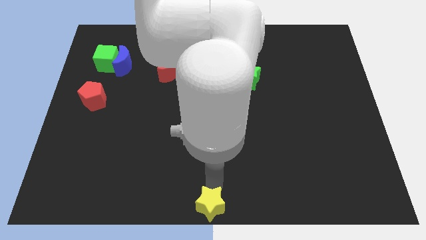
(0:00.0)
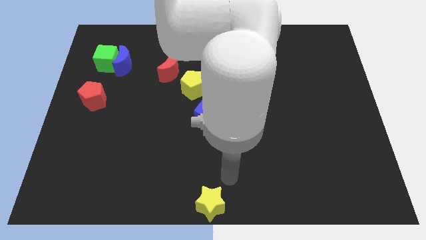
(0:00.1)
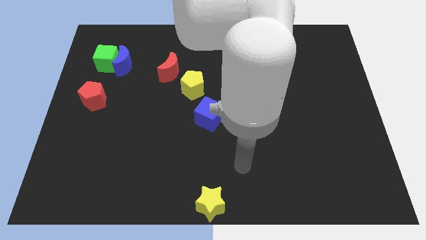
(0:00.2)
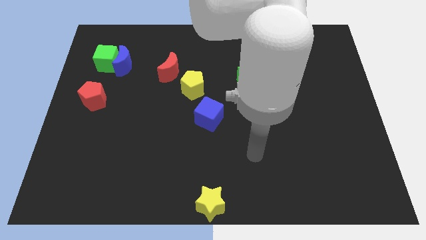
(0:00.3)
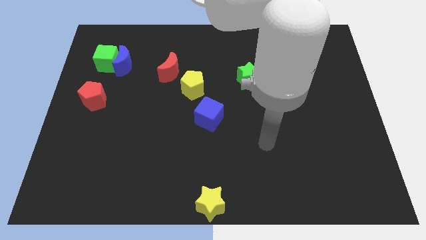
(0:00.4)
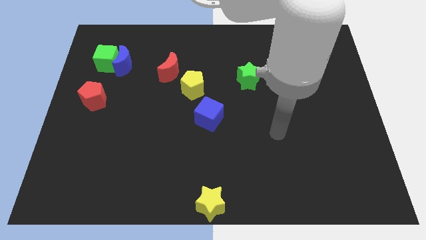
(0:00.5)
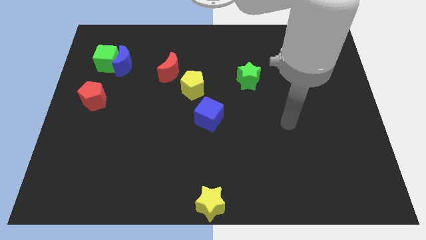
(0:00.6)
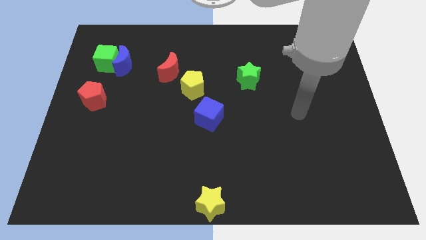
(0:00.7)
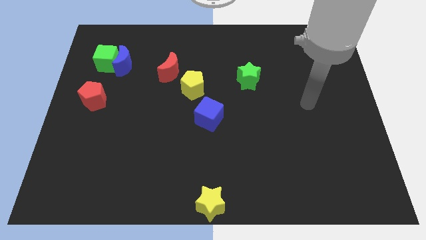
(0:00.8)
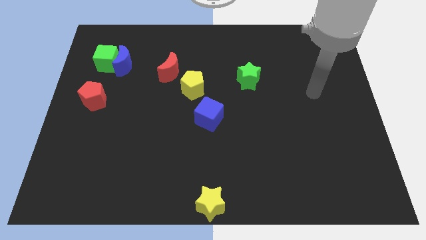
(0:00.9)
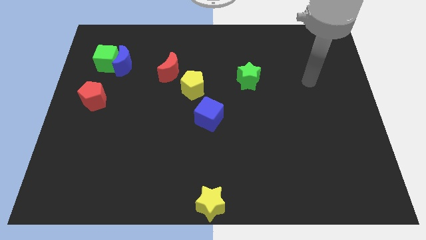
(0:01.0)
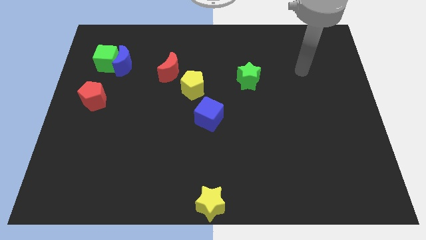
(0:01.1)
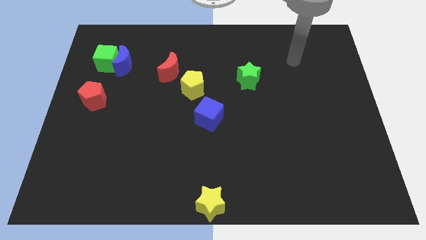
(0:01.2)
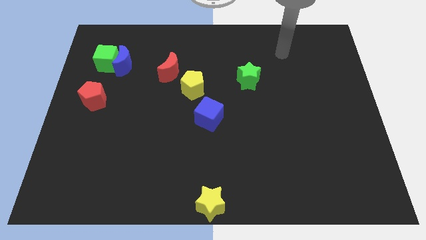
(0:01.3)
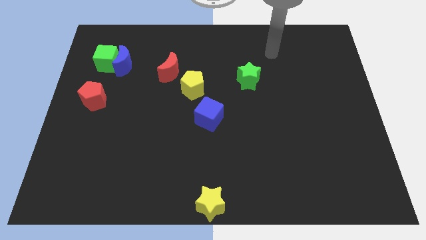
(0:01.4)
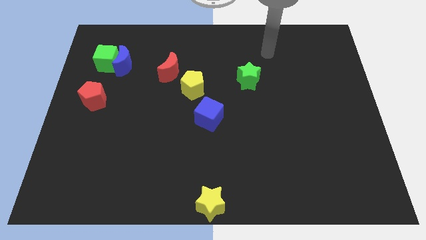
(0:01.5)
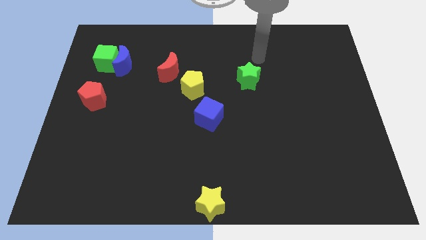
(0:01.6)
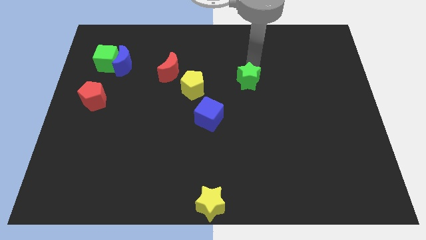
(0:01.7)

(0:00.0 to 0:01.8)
move the arm towards the top of the green star

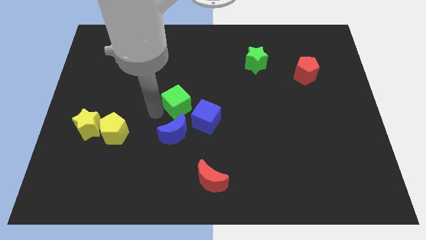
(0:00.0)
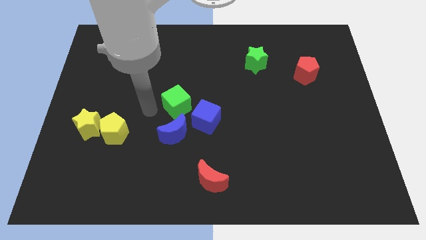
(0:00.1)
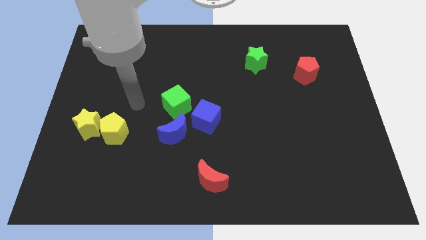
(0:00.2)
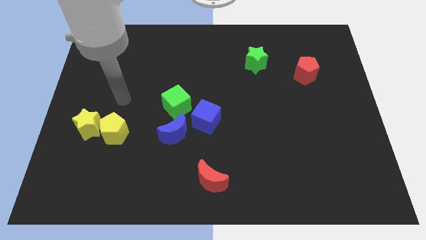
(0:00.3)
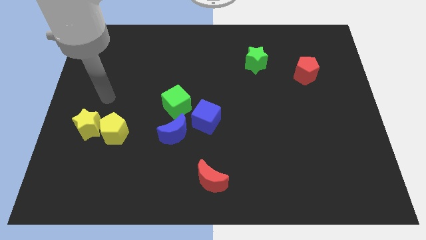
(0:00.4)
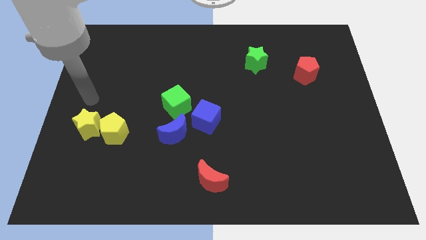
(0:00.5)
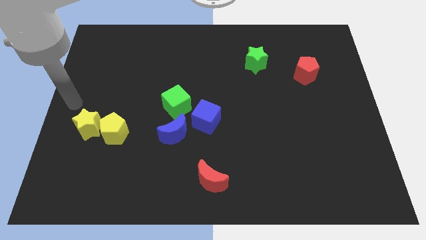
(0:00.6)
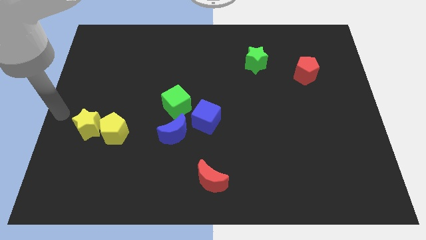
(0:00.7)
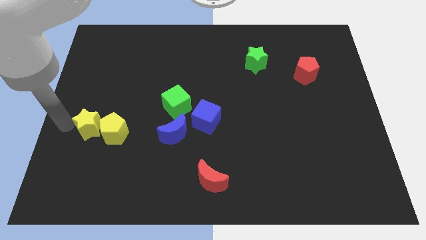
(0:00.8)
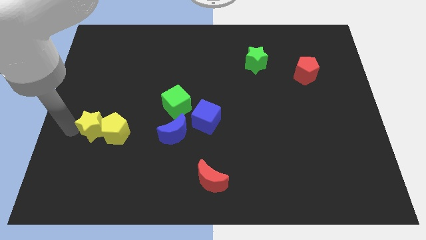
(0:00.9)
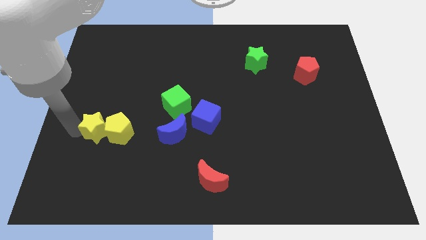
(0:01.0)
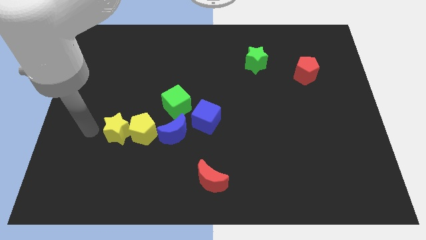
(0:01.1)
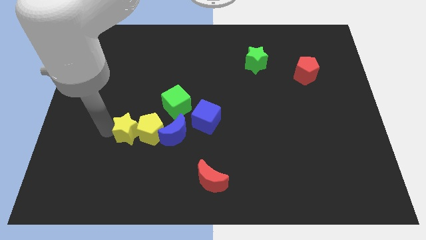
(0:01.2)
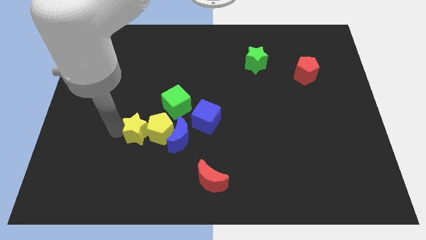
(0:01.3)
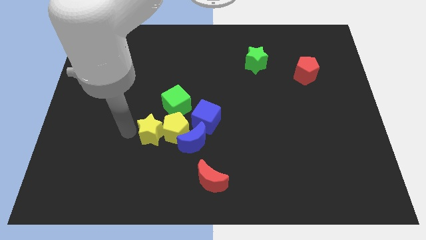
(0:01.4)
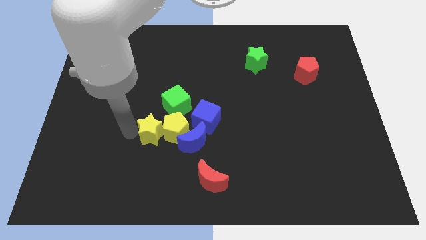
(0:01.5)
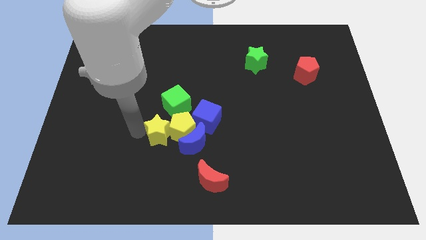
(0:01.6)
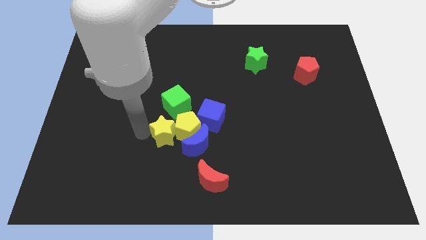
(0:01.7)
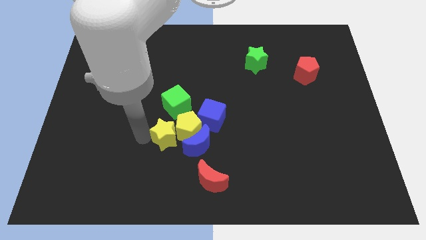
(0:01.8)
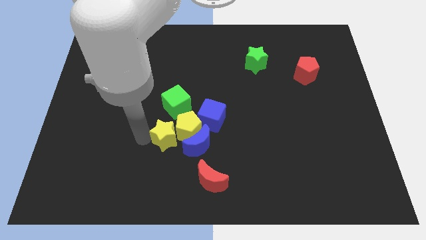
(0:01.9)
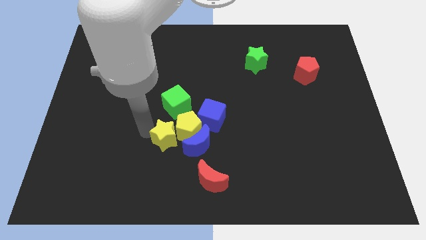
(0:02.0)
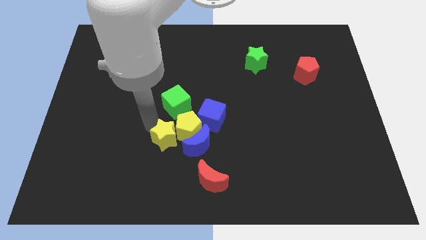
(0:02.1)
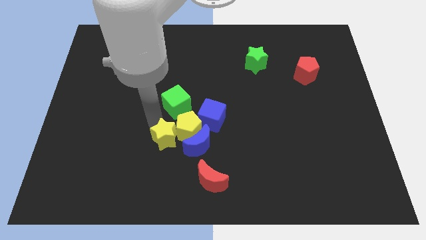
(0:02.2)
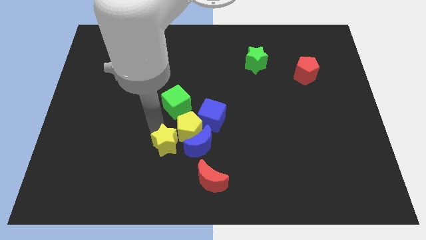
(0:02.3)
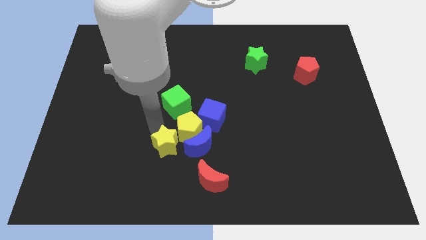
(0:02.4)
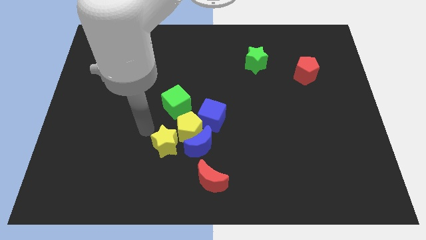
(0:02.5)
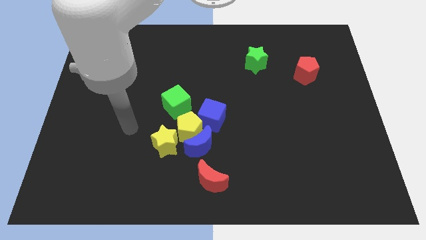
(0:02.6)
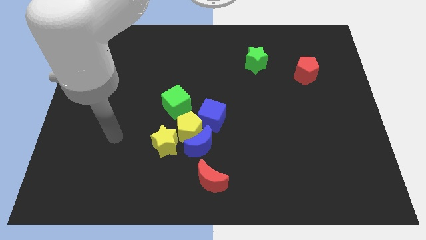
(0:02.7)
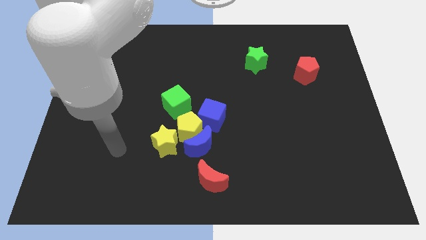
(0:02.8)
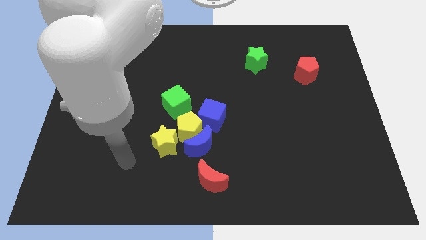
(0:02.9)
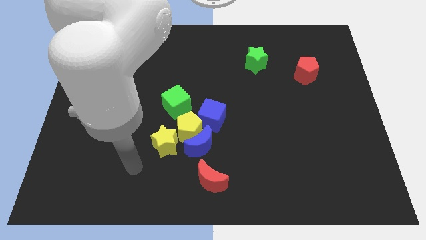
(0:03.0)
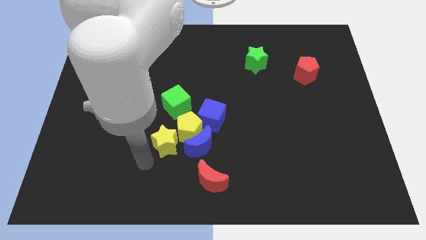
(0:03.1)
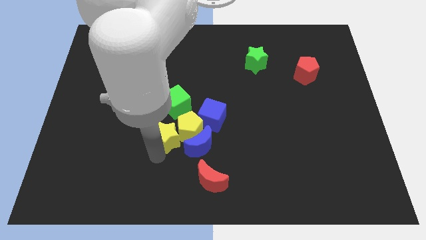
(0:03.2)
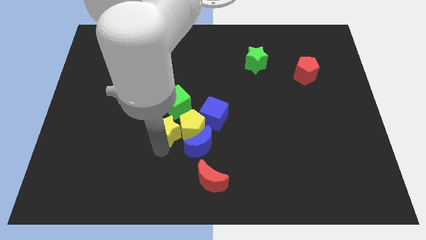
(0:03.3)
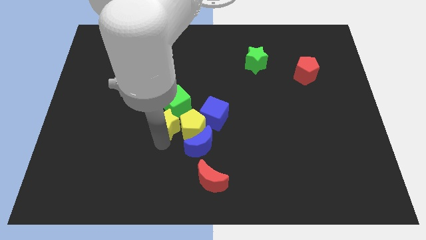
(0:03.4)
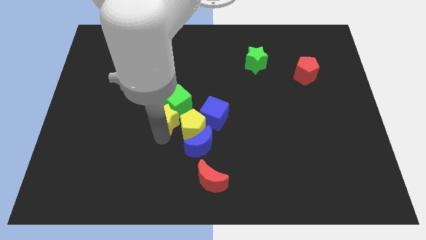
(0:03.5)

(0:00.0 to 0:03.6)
push the yellow blocks to the bottom of the green cube

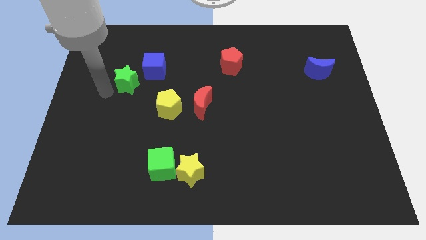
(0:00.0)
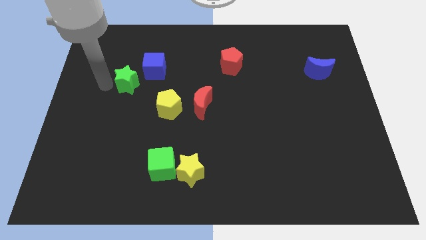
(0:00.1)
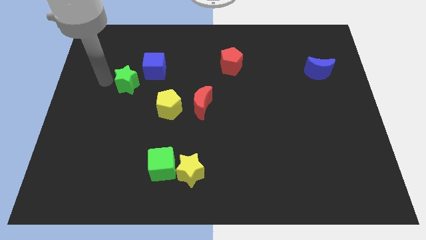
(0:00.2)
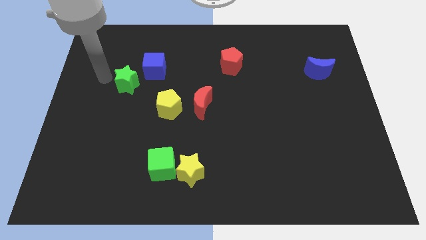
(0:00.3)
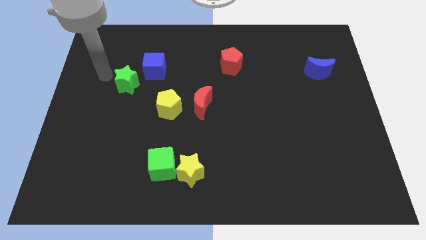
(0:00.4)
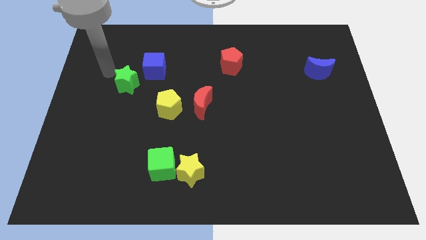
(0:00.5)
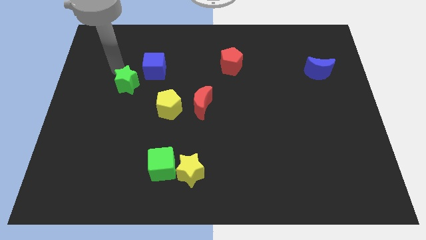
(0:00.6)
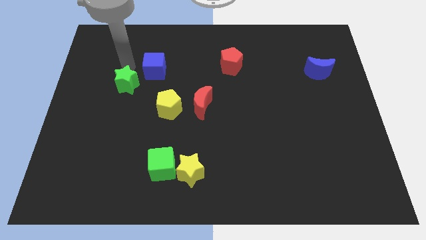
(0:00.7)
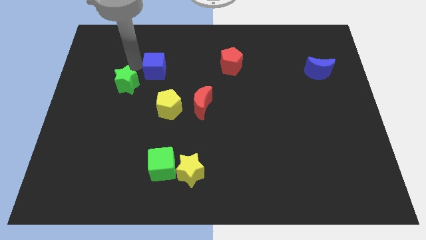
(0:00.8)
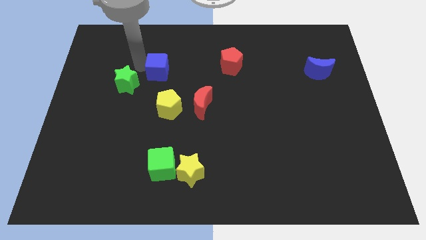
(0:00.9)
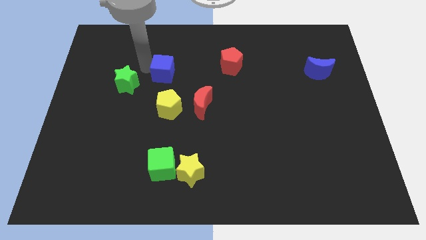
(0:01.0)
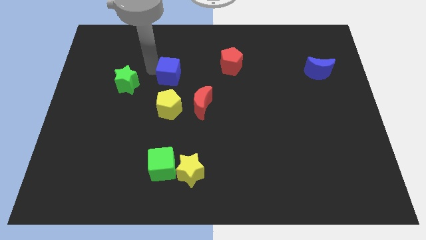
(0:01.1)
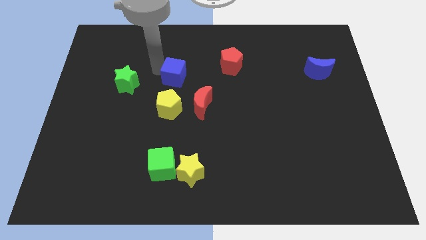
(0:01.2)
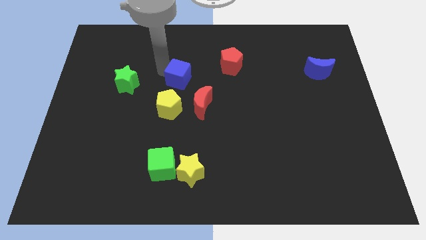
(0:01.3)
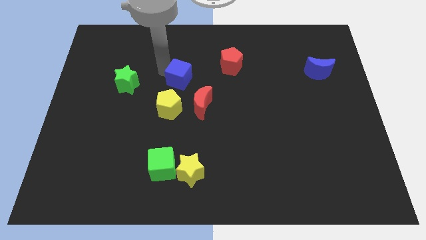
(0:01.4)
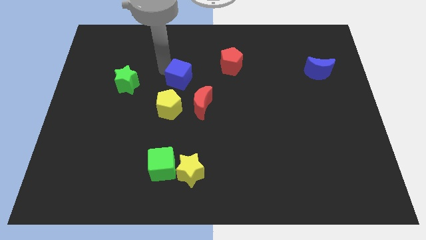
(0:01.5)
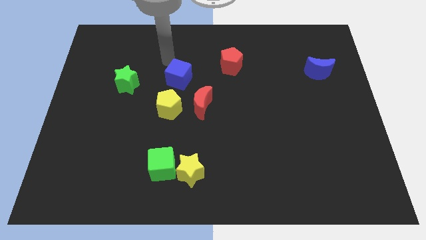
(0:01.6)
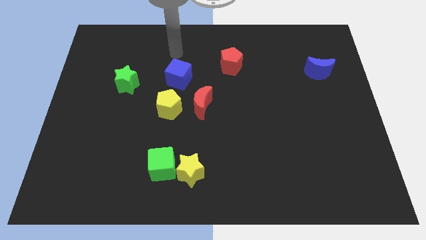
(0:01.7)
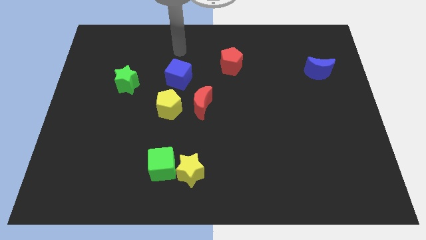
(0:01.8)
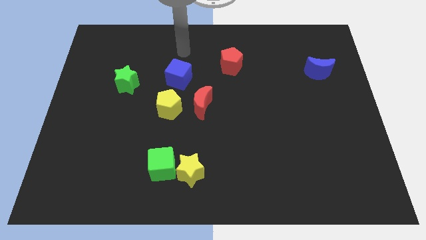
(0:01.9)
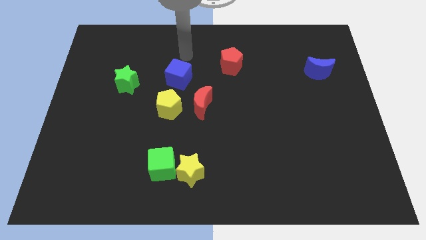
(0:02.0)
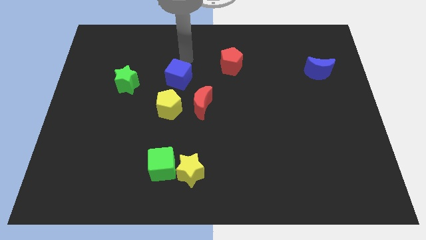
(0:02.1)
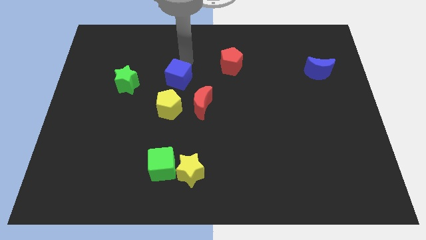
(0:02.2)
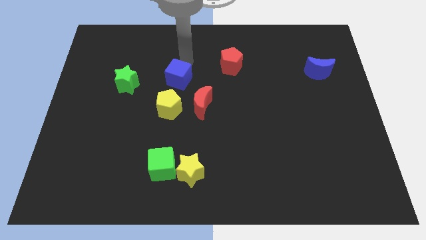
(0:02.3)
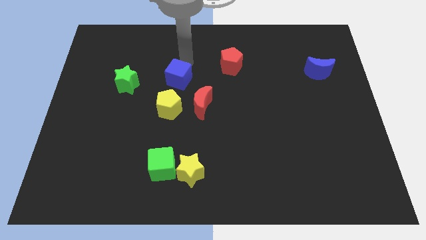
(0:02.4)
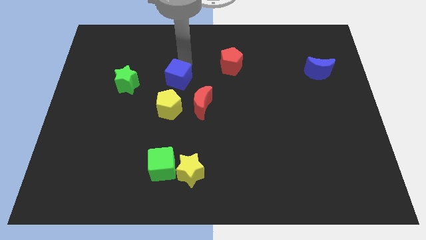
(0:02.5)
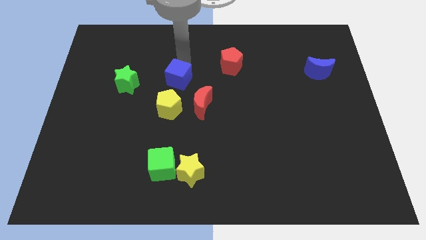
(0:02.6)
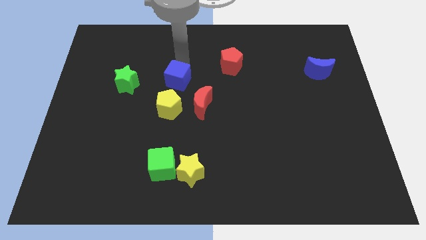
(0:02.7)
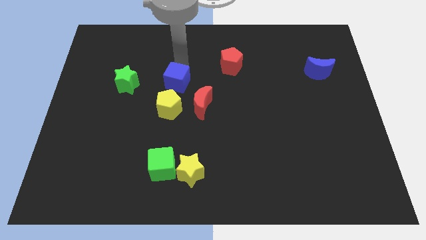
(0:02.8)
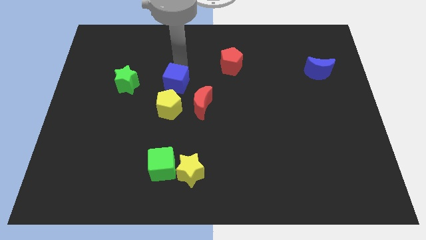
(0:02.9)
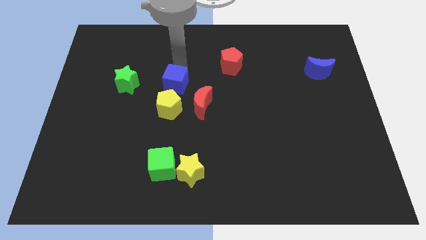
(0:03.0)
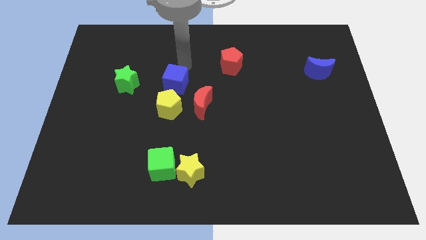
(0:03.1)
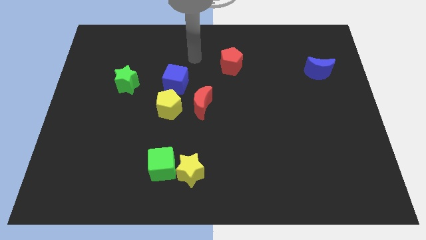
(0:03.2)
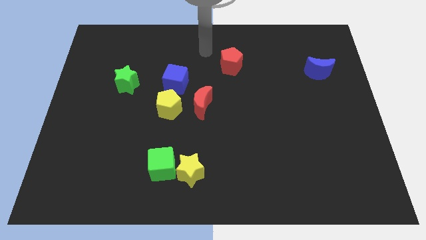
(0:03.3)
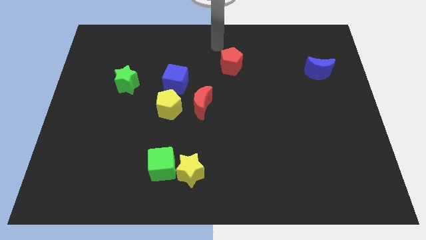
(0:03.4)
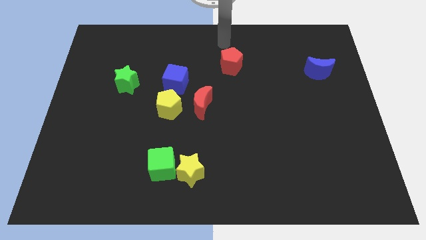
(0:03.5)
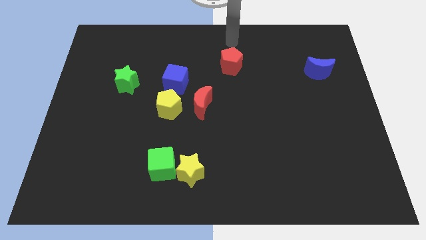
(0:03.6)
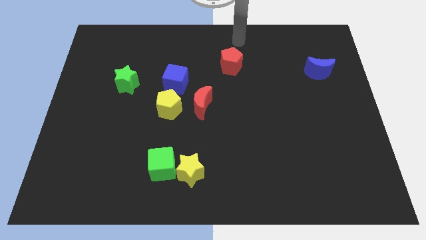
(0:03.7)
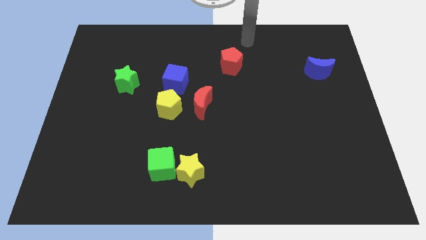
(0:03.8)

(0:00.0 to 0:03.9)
push the blue cube towards the yellow pentagon
